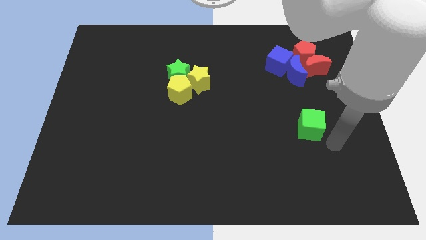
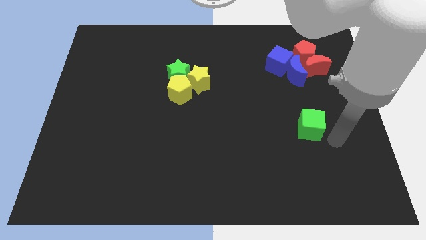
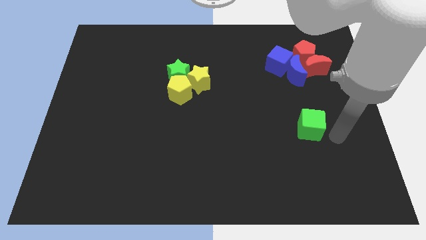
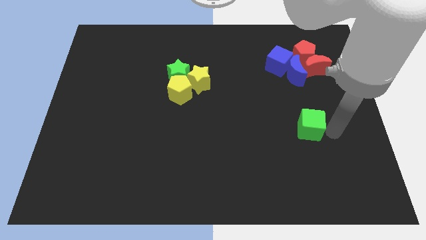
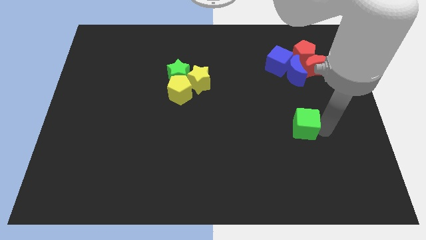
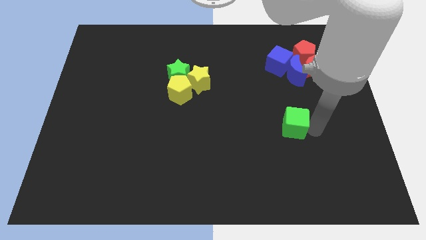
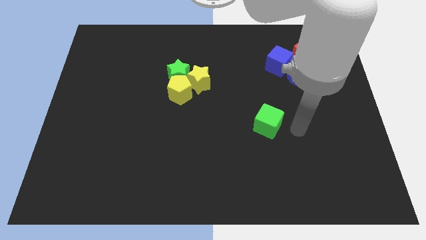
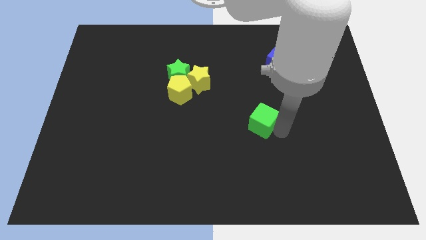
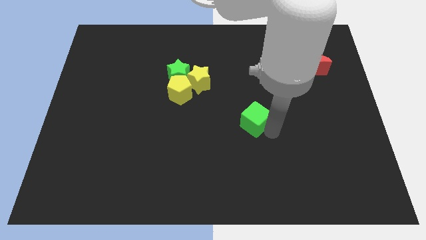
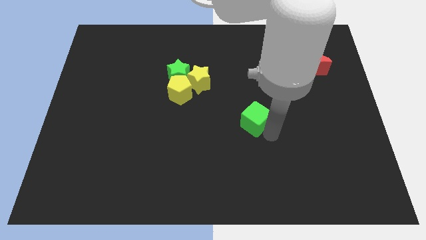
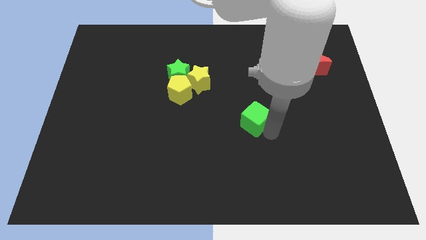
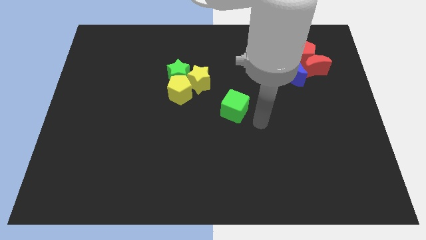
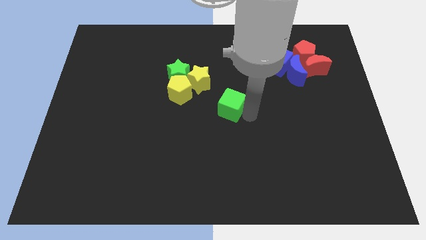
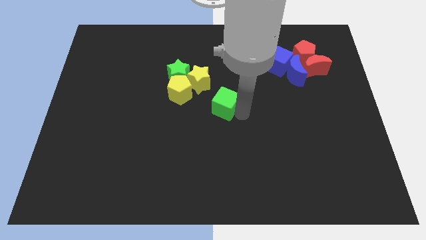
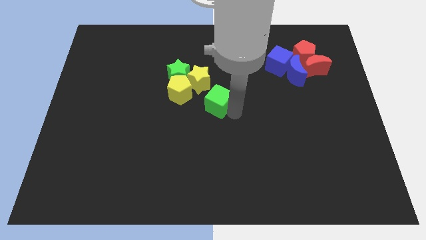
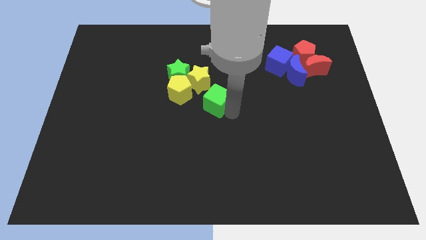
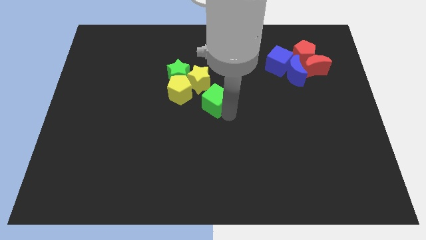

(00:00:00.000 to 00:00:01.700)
place the green cube at the center of the board

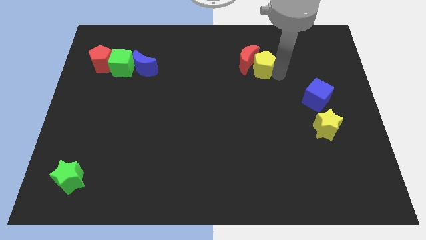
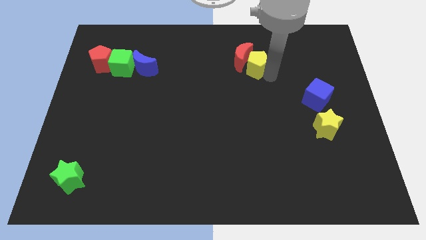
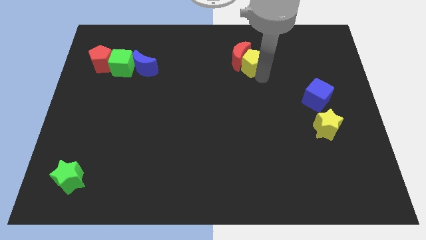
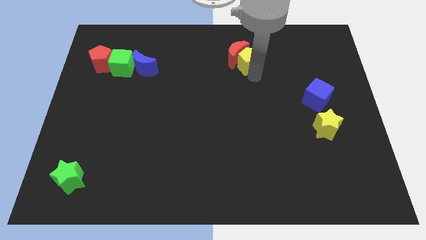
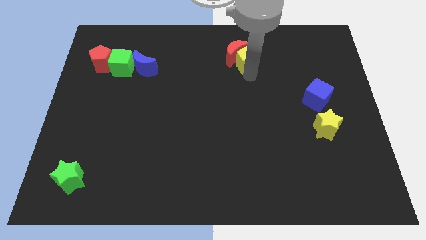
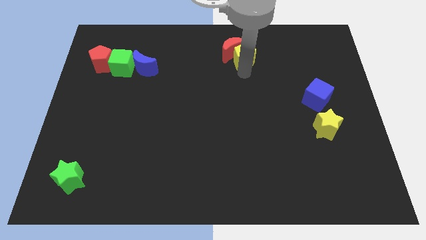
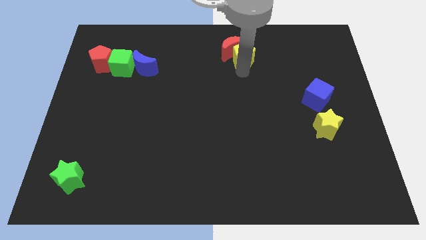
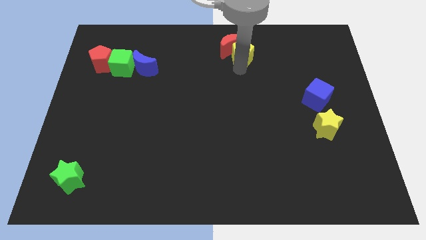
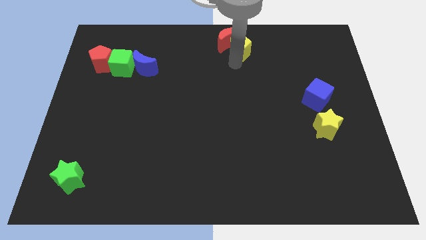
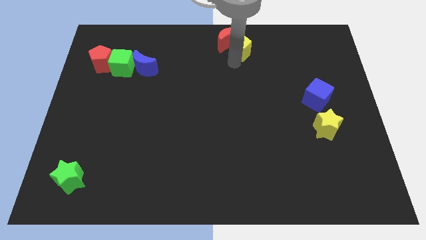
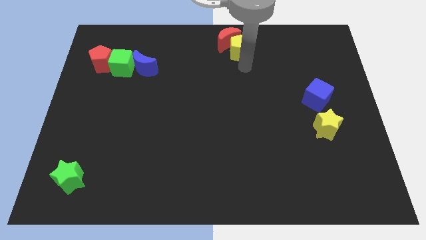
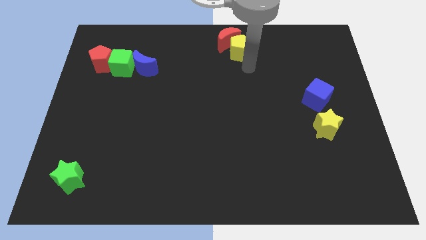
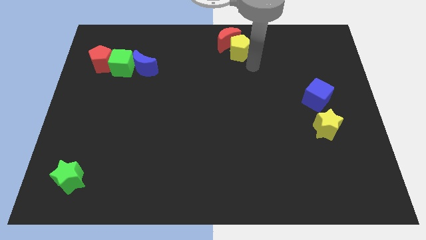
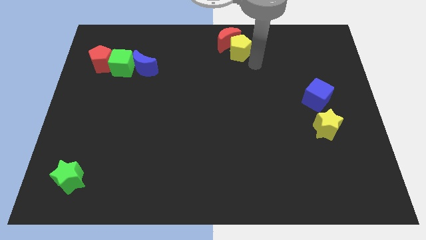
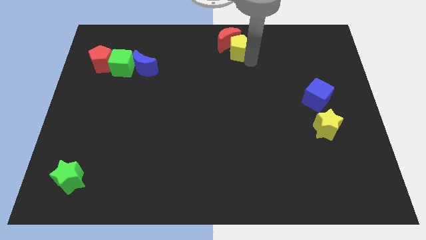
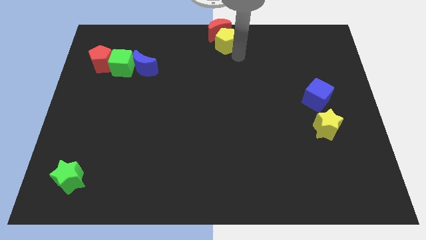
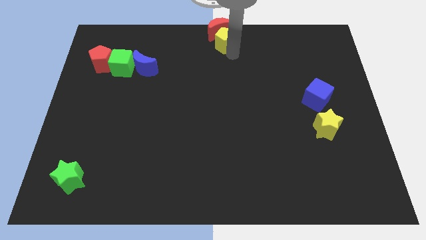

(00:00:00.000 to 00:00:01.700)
move yellow pentagon and red moon to the top middle of the board

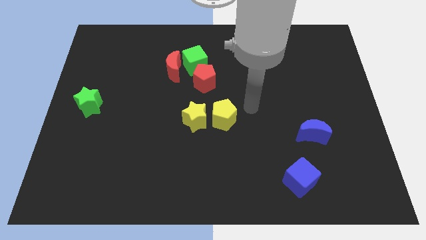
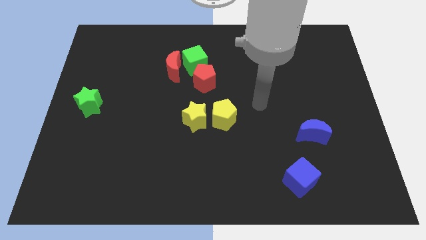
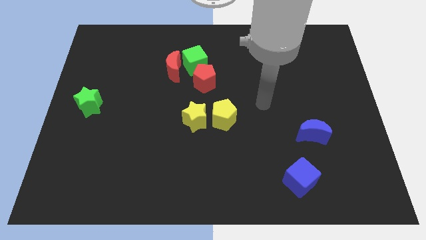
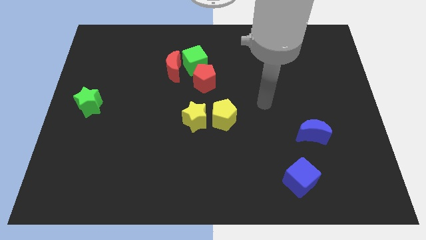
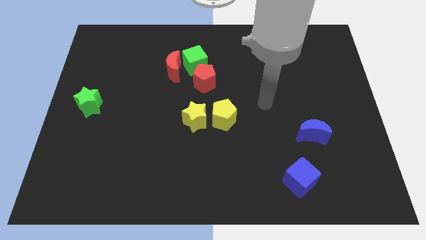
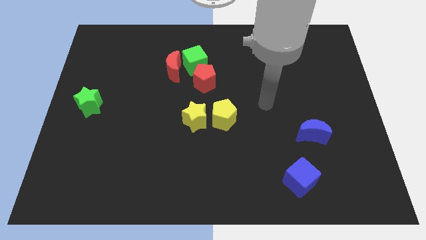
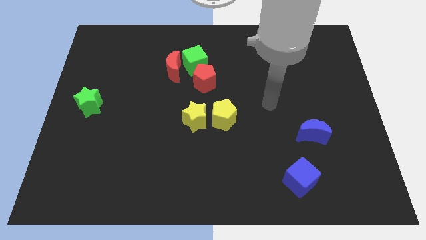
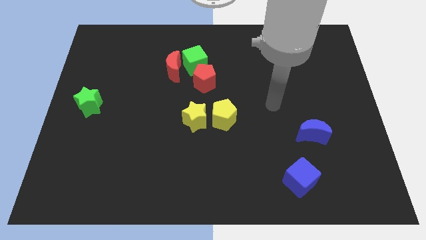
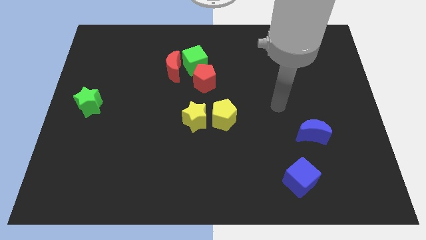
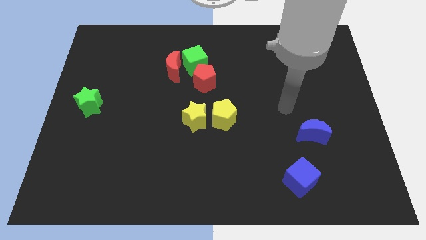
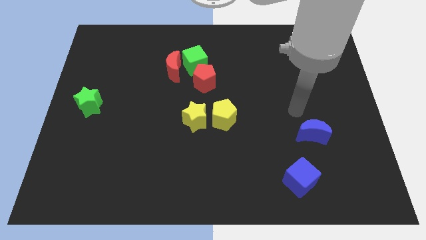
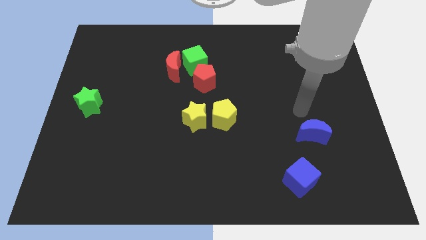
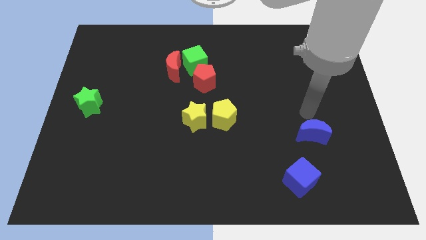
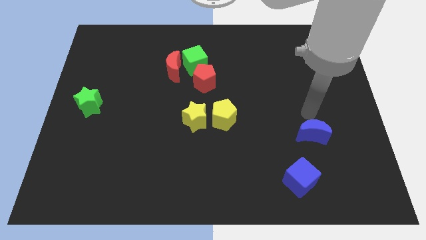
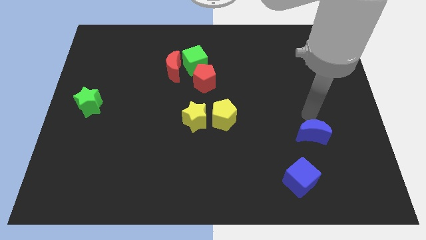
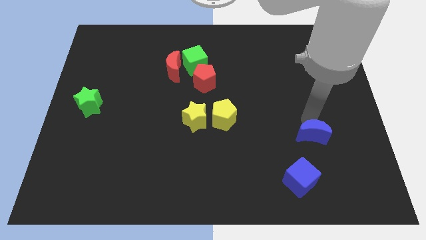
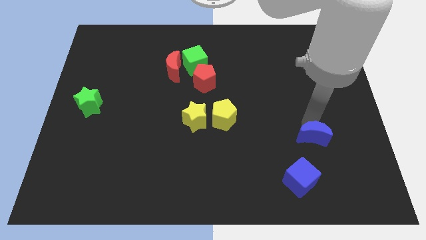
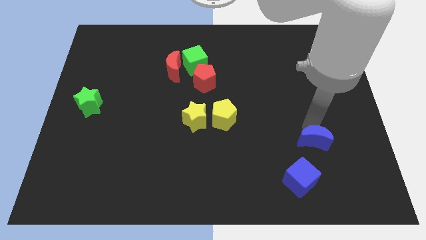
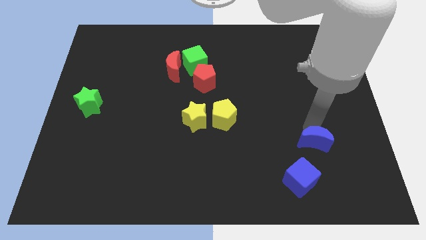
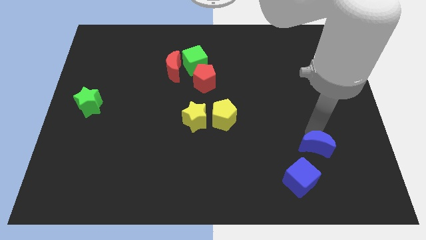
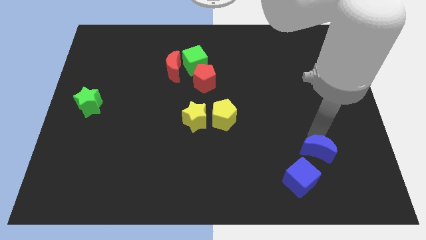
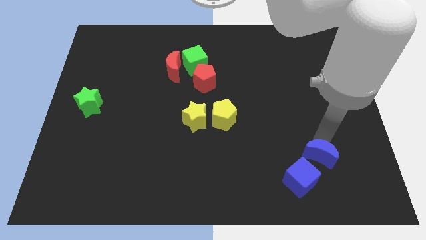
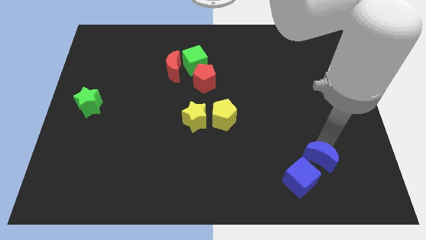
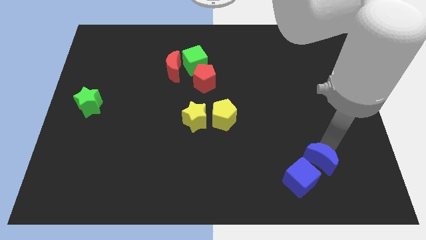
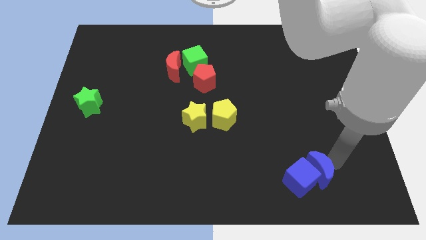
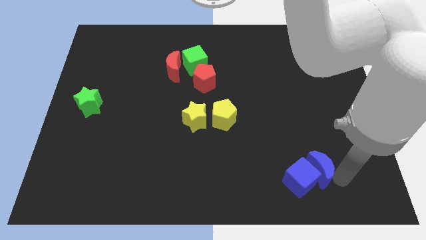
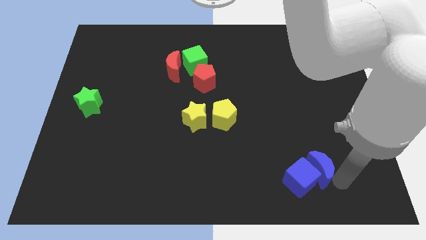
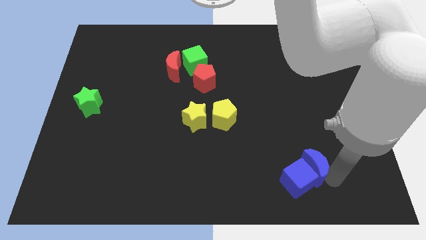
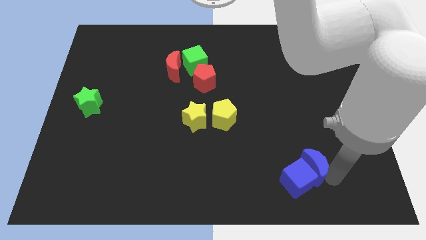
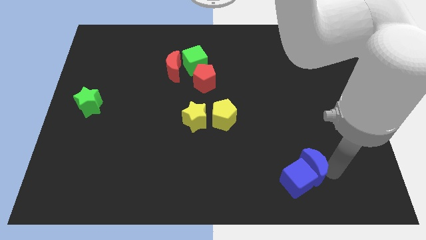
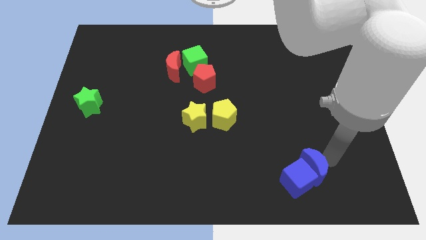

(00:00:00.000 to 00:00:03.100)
place blue moon into the blue cube

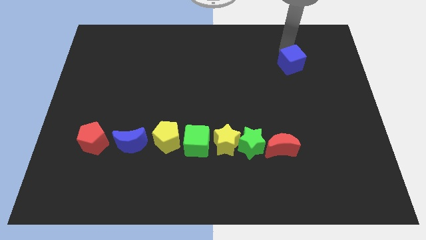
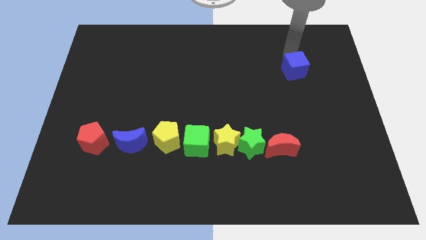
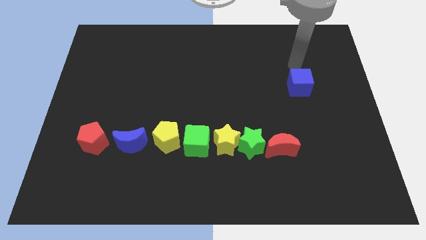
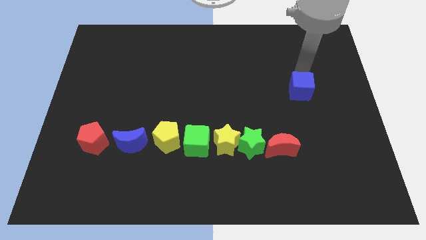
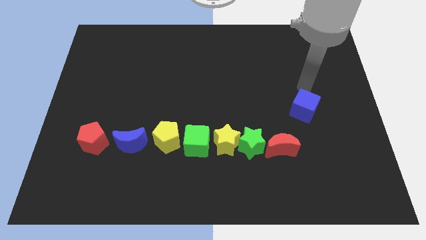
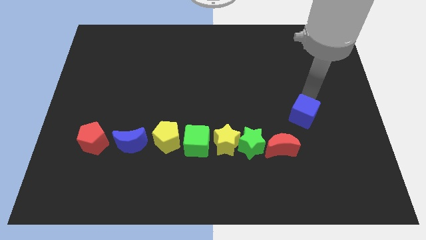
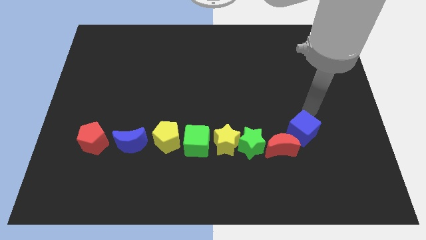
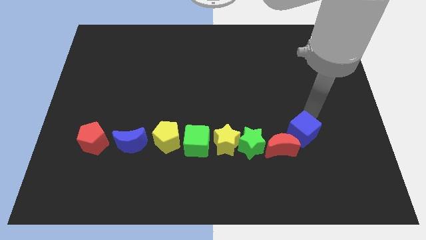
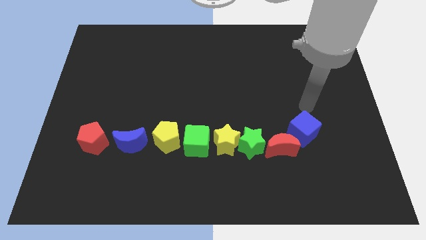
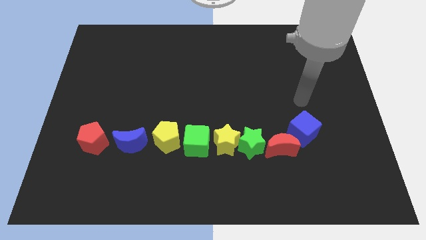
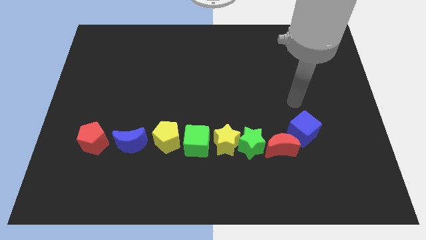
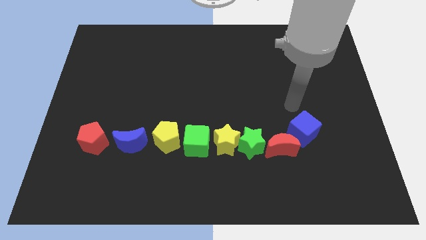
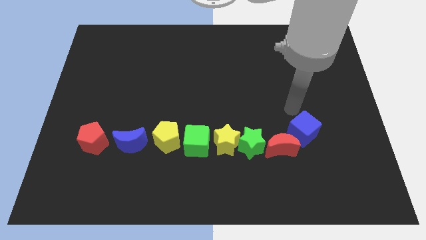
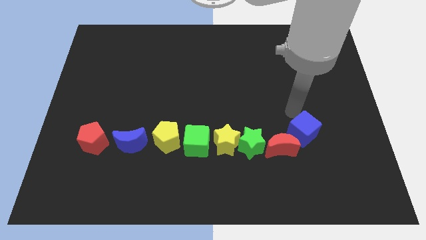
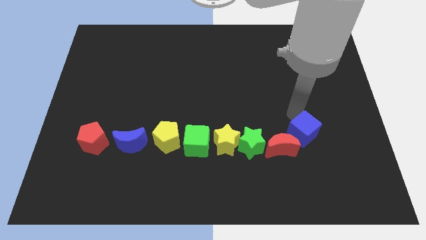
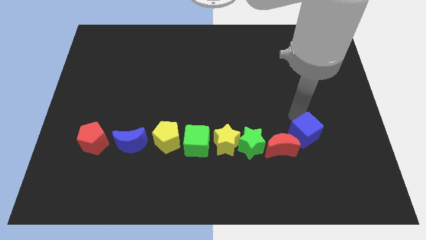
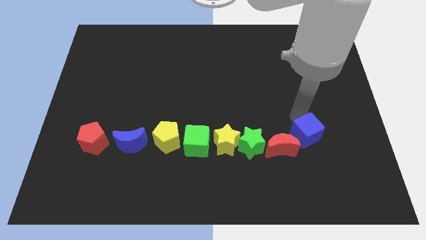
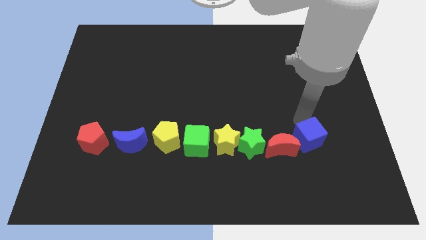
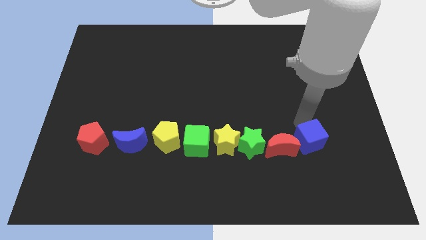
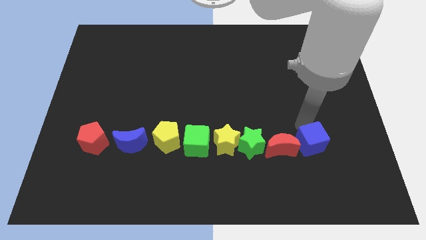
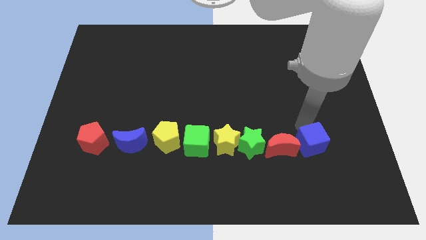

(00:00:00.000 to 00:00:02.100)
put the blue cube on the right side of the red crescent

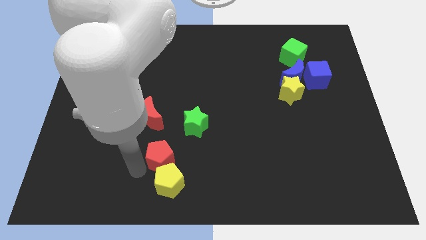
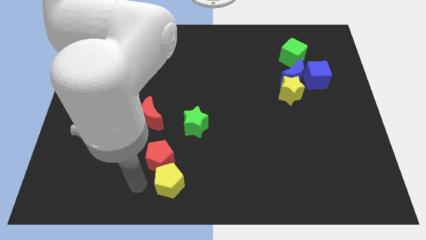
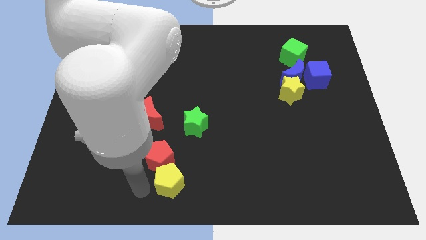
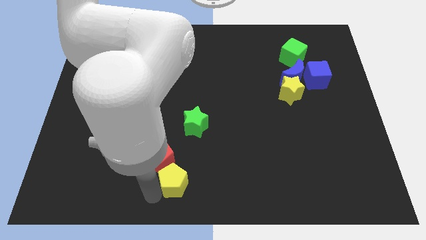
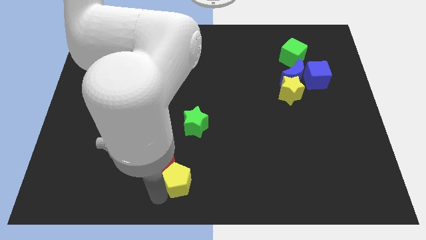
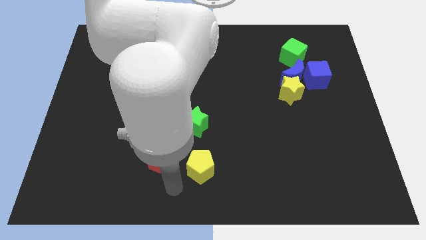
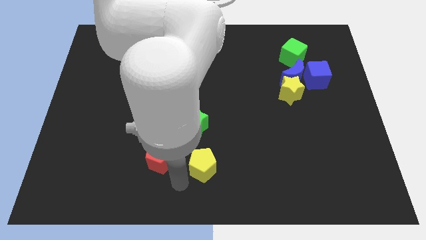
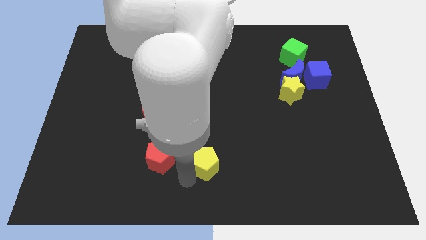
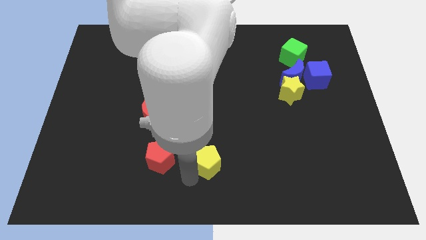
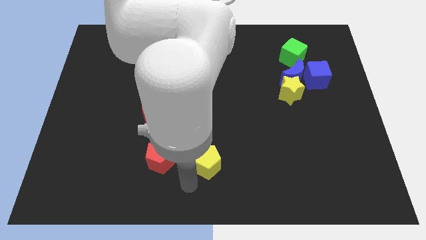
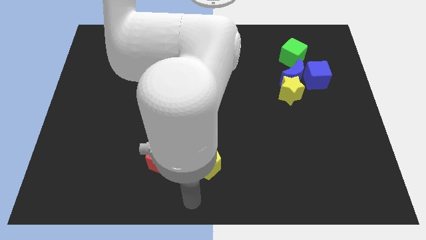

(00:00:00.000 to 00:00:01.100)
place yellow pentagon adjacent to red pentagon
